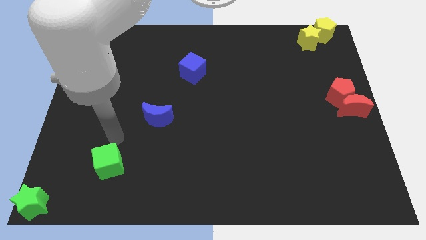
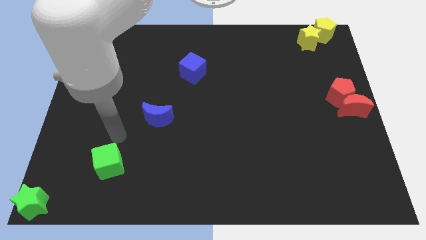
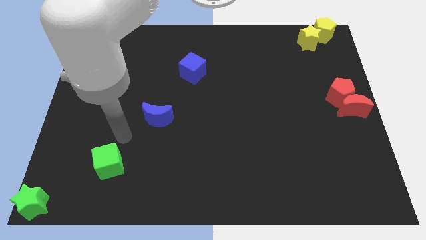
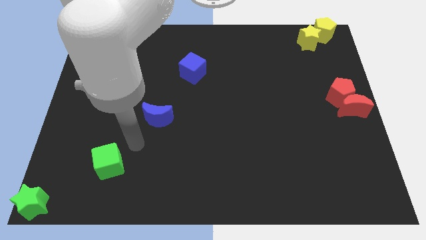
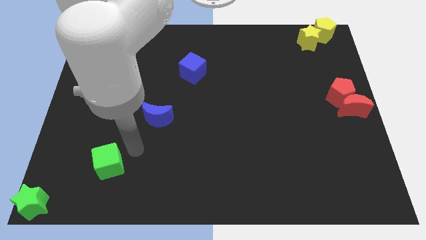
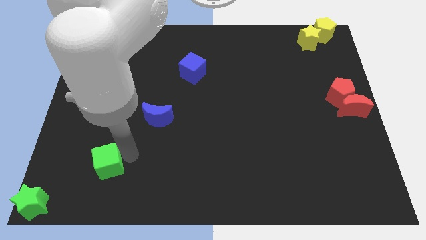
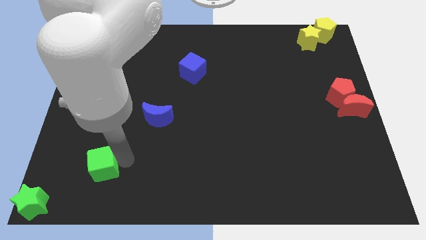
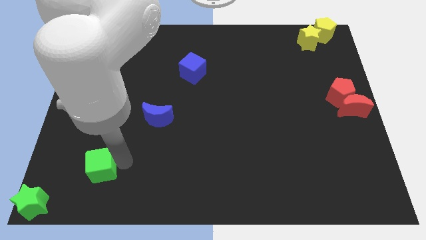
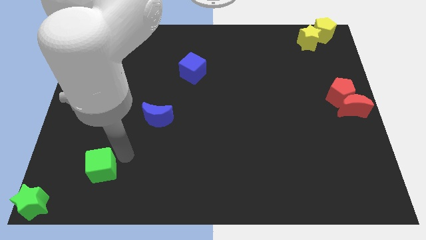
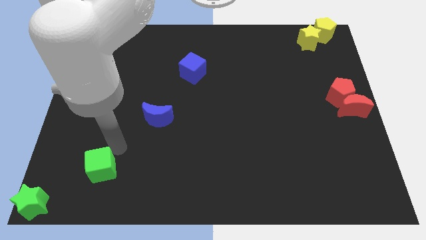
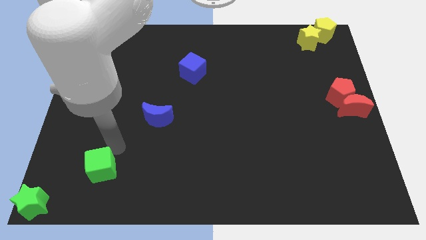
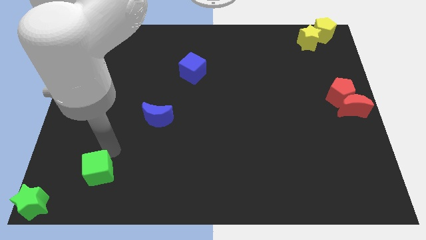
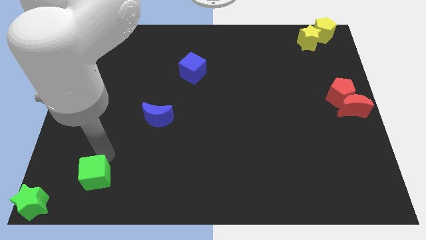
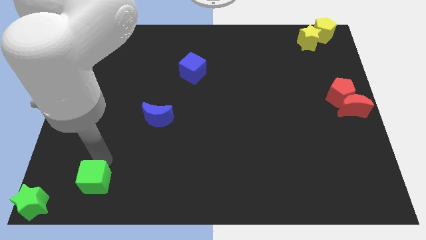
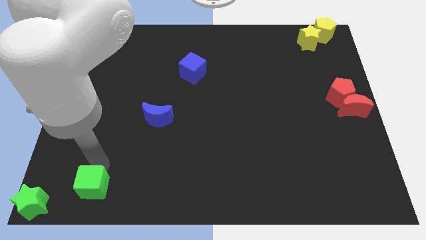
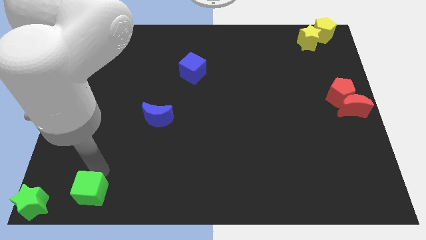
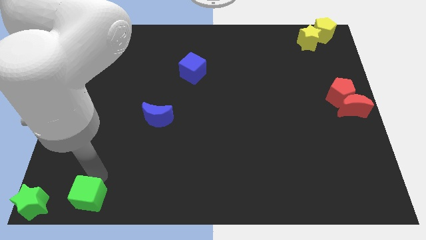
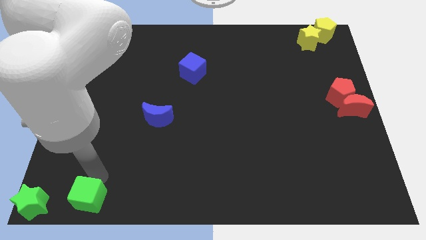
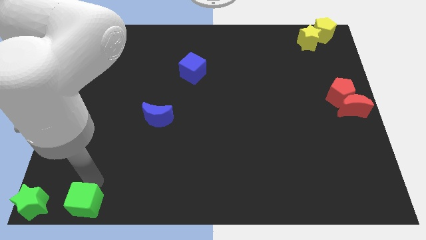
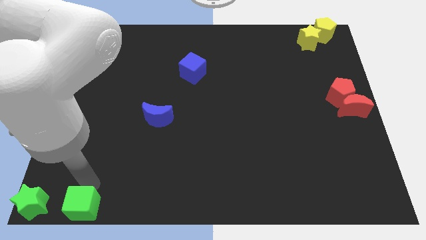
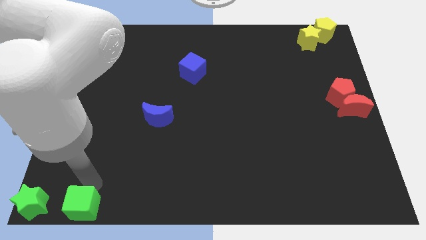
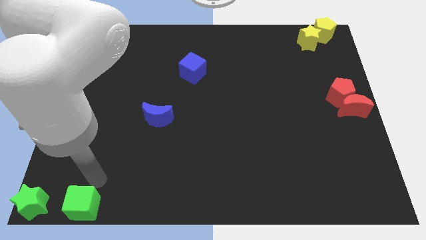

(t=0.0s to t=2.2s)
place the green cube right side of the green star

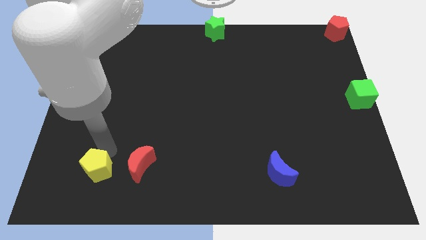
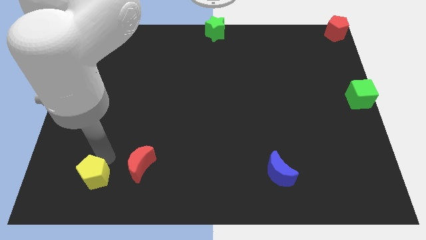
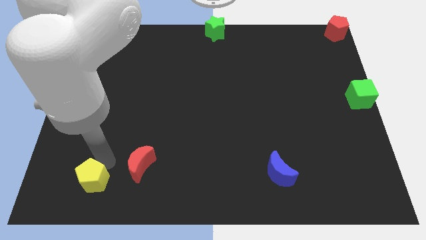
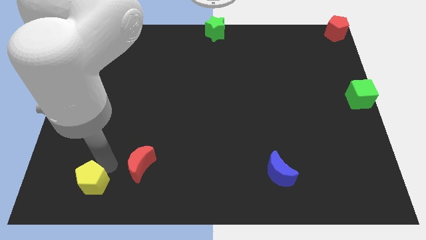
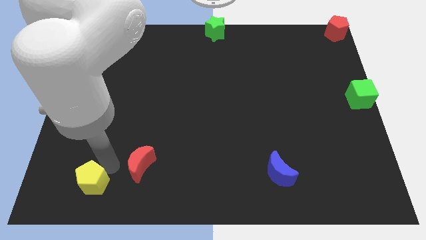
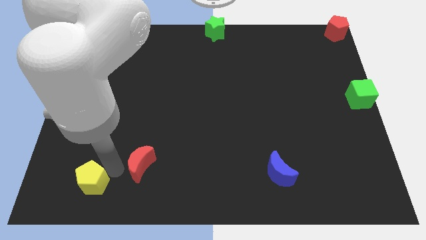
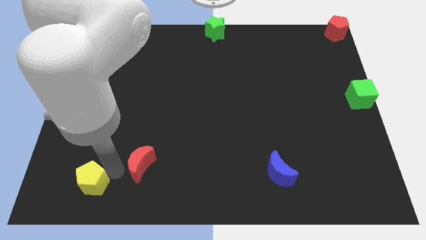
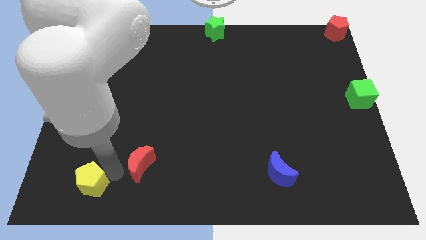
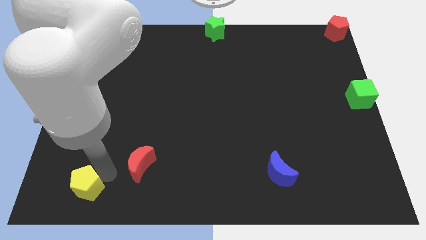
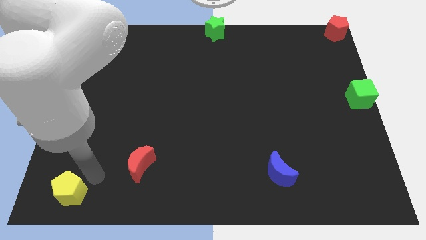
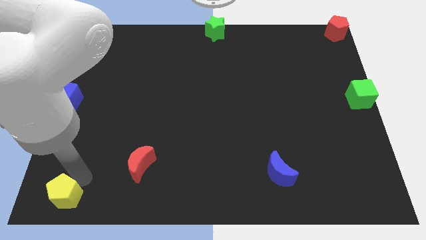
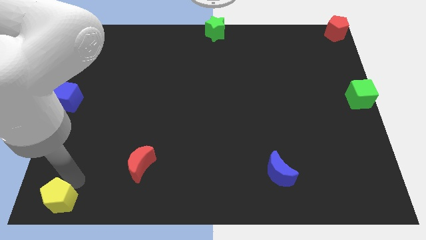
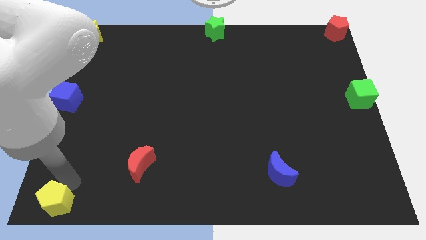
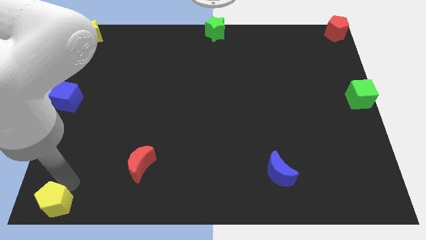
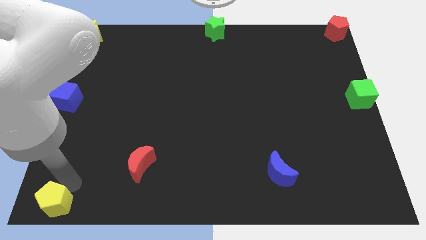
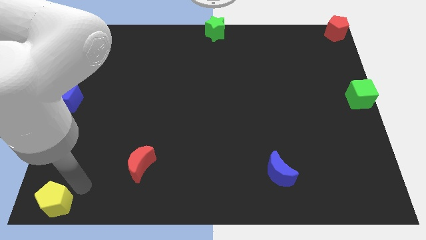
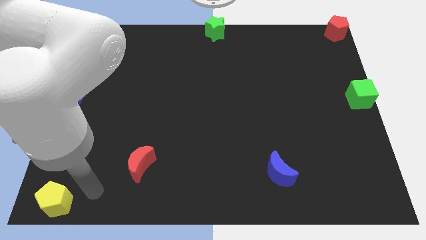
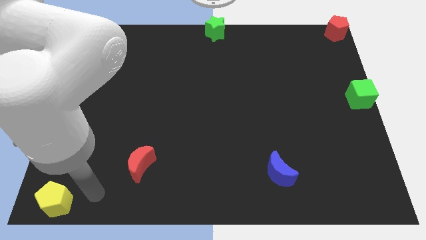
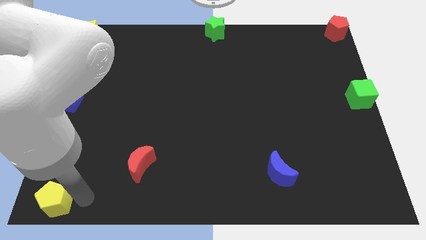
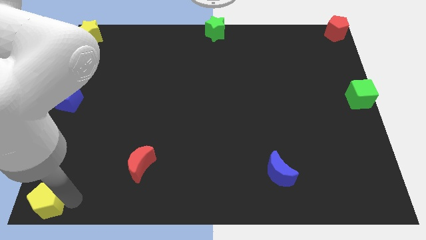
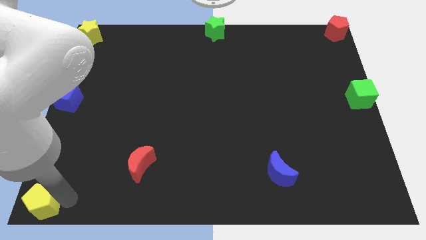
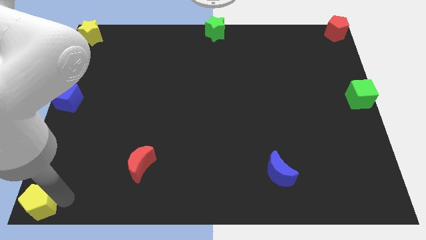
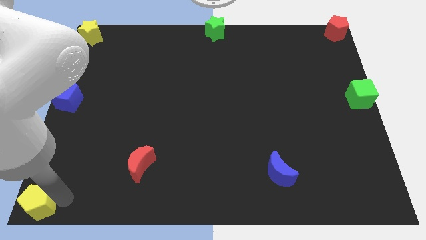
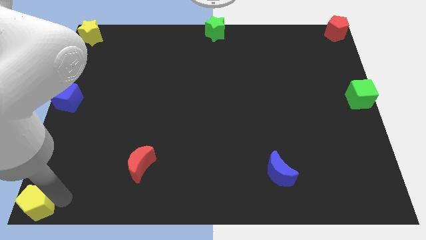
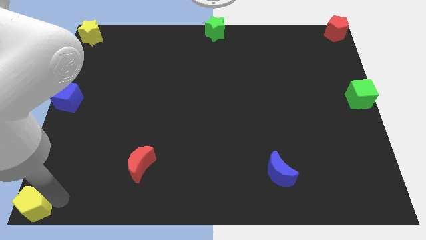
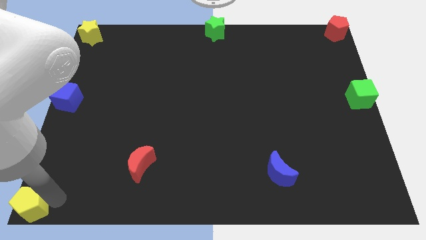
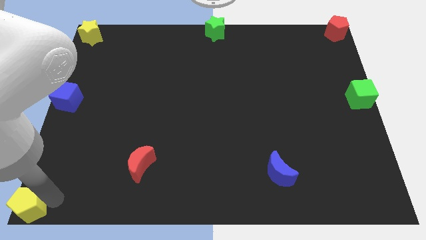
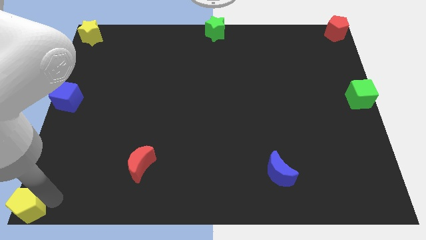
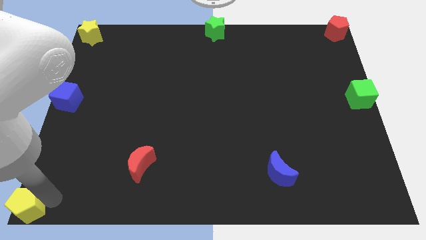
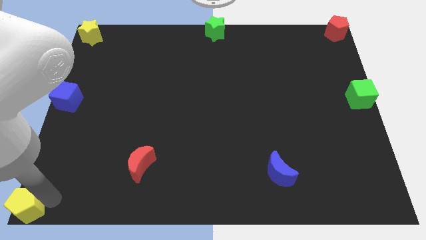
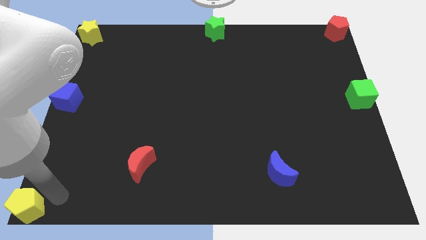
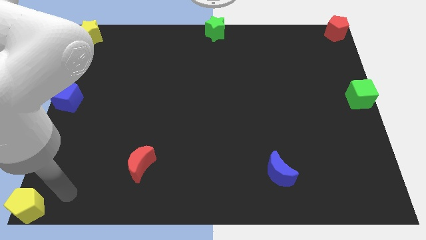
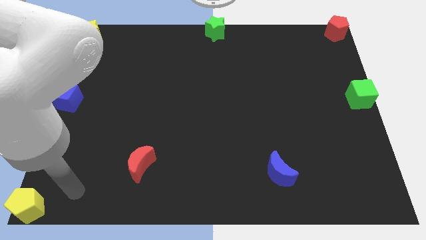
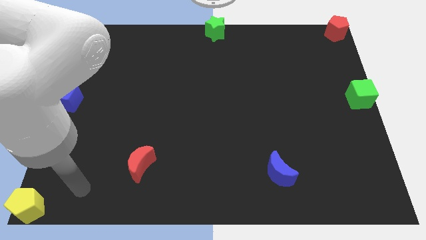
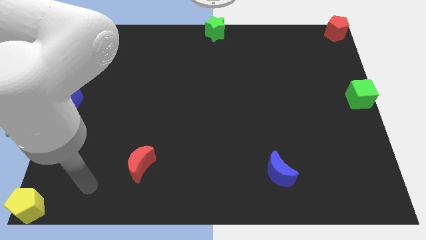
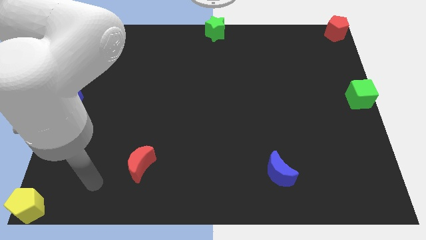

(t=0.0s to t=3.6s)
place the yellow pentagon towards the bottom left corner of the board

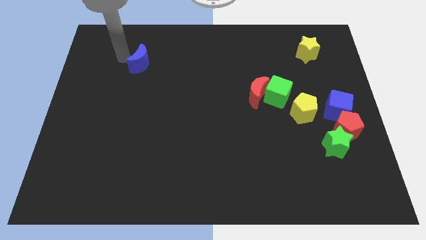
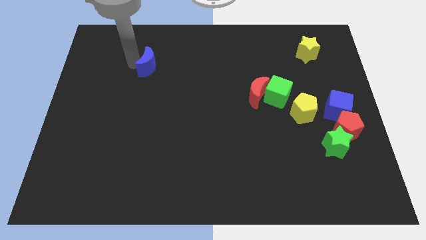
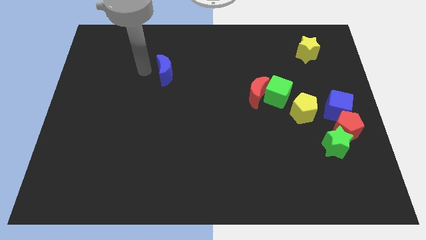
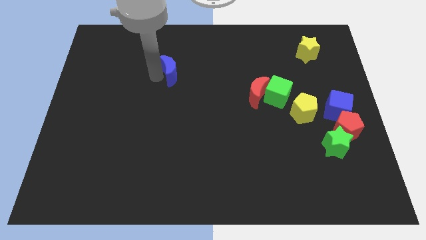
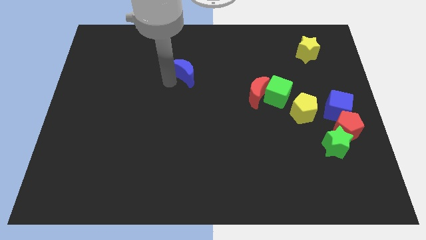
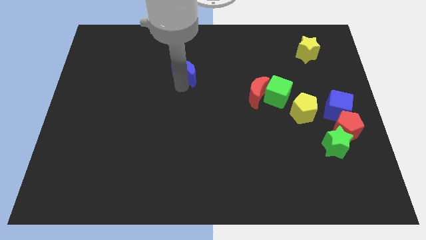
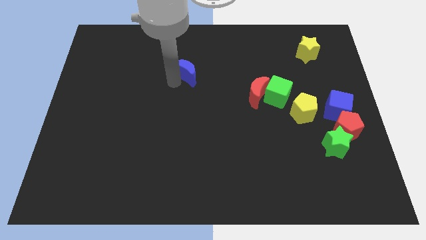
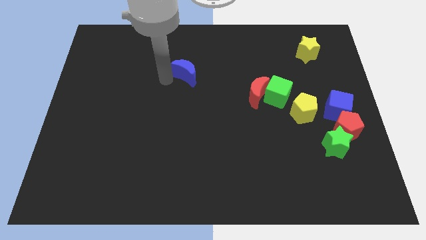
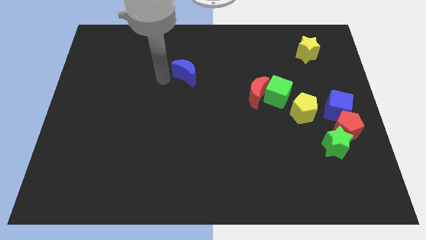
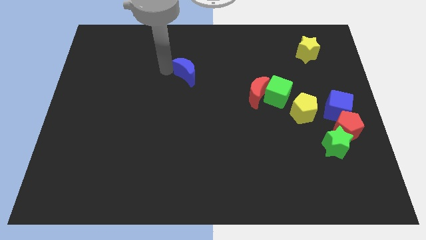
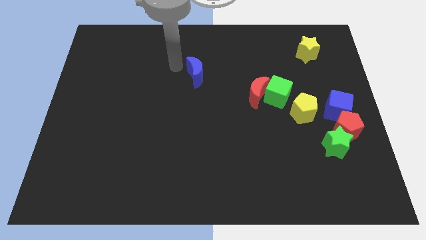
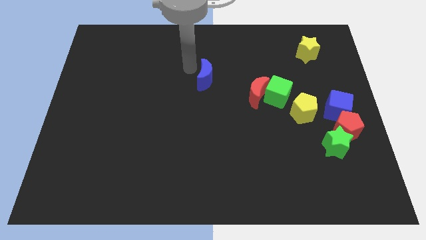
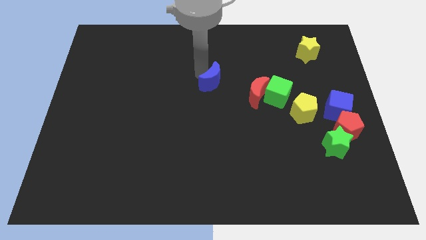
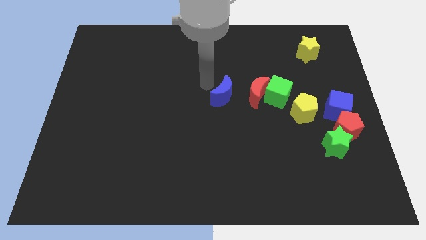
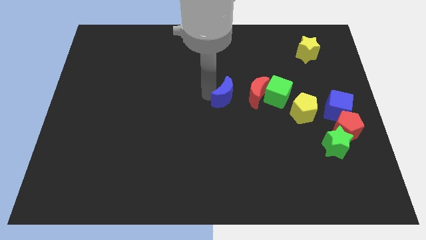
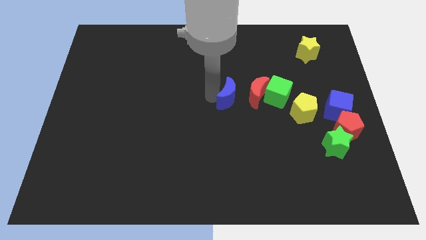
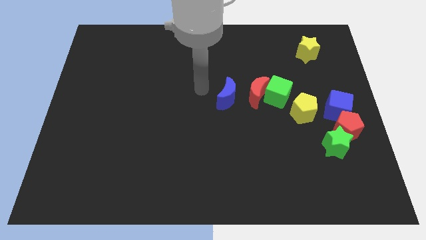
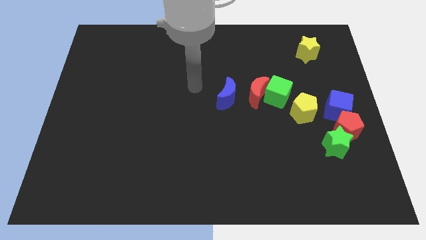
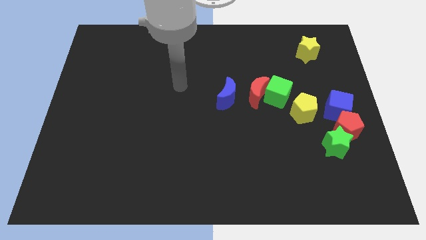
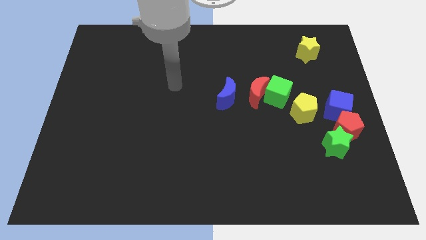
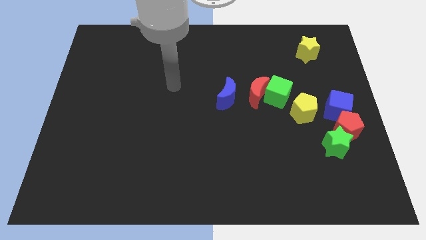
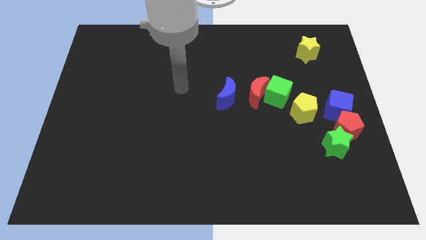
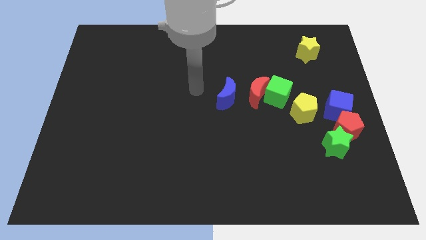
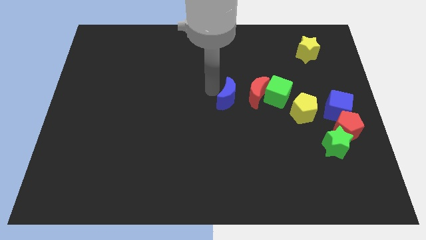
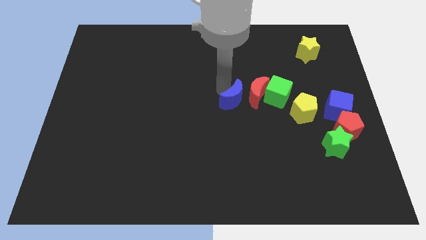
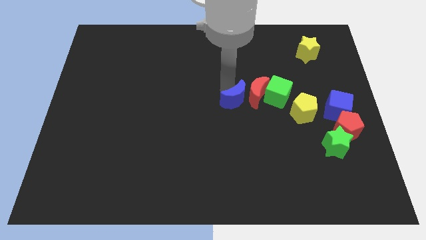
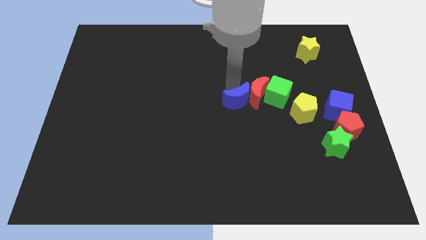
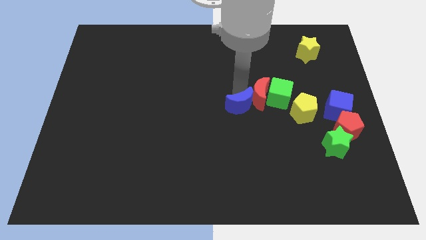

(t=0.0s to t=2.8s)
place the blue moon at the bottom left side of red moon

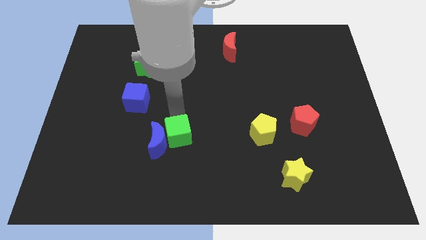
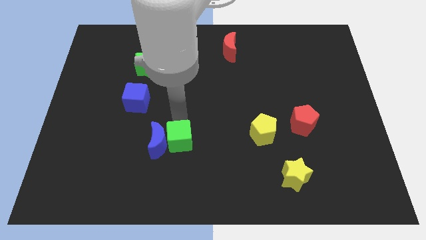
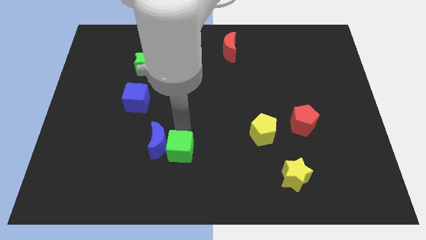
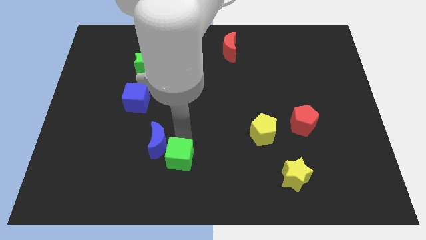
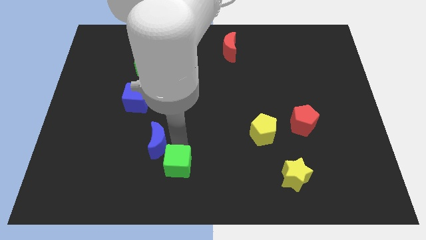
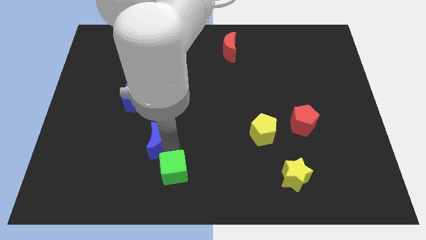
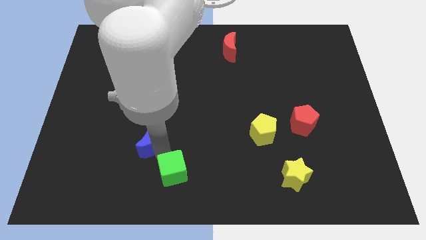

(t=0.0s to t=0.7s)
slightly move the green cube towards down
